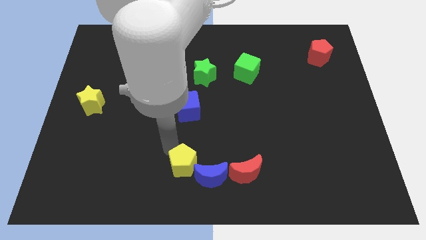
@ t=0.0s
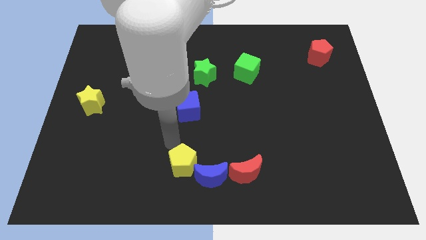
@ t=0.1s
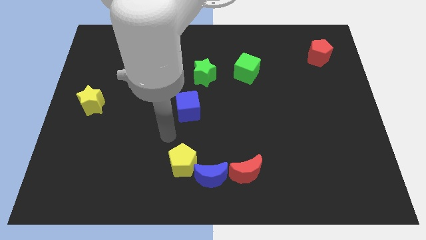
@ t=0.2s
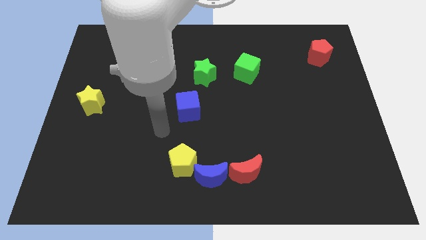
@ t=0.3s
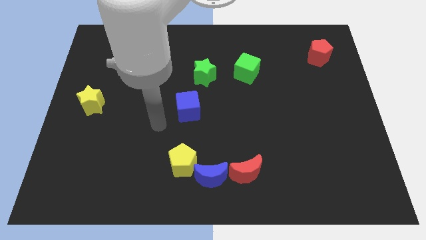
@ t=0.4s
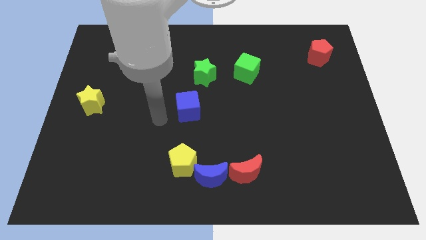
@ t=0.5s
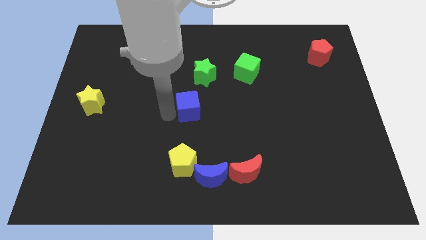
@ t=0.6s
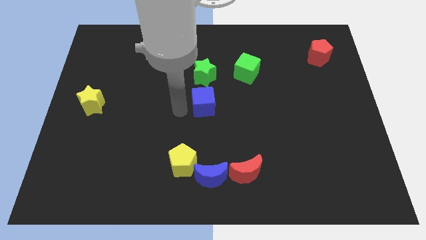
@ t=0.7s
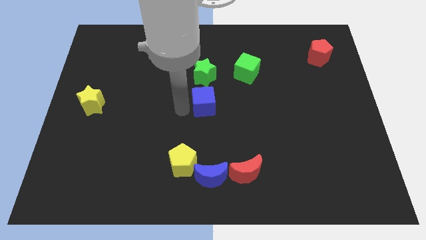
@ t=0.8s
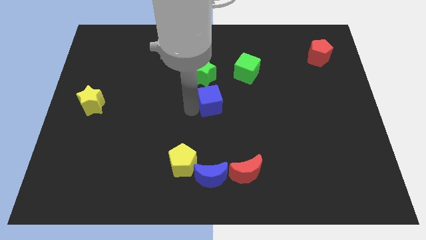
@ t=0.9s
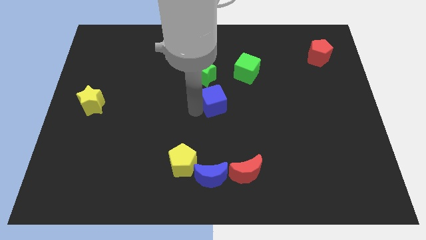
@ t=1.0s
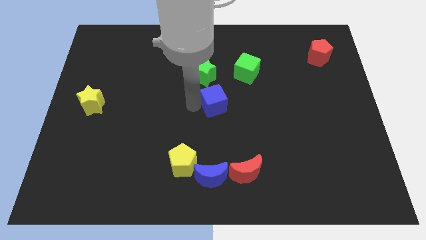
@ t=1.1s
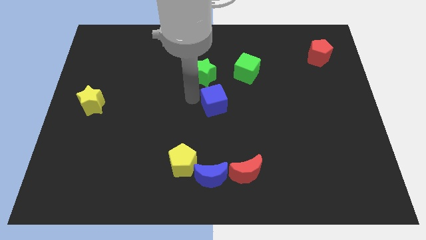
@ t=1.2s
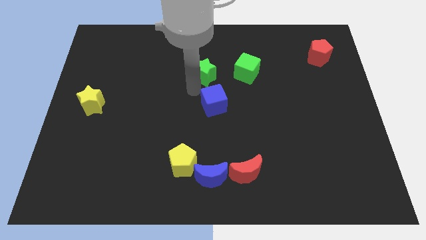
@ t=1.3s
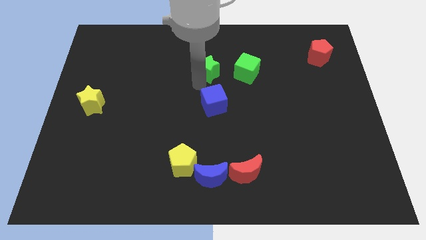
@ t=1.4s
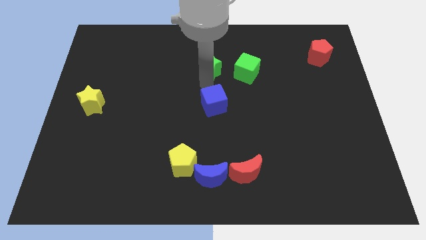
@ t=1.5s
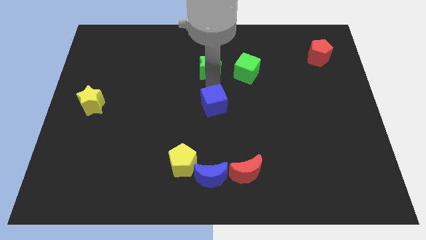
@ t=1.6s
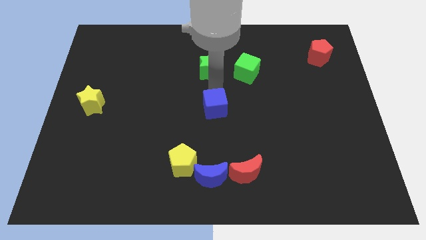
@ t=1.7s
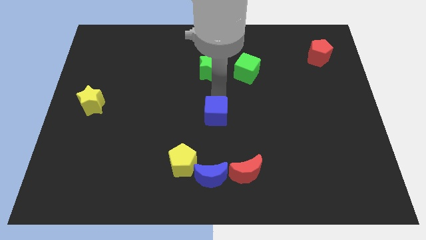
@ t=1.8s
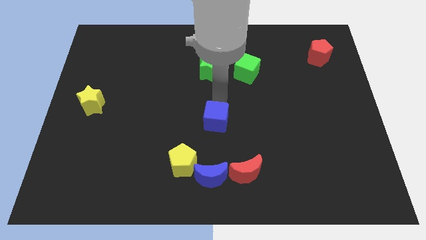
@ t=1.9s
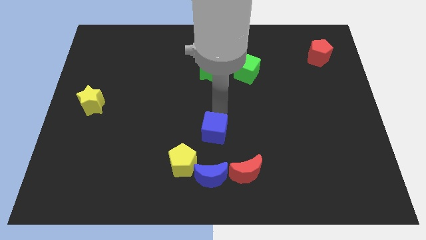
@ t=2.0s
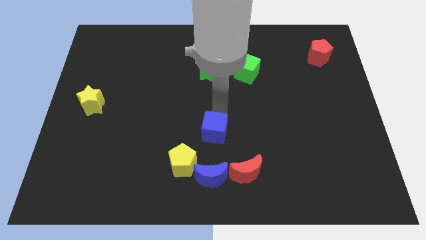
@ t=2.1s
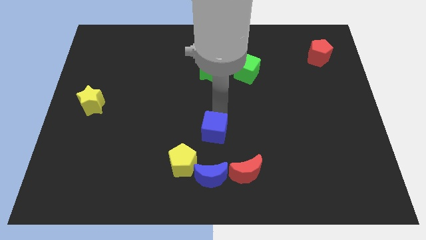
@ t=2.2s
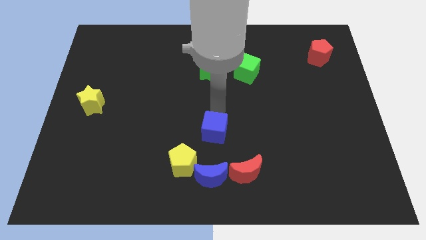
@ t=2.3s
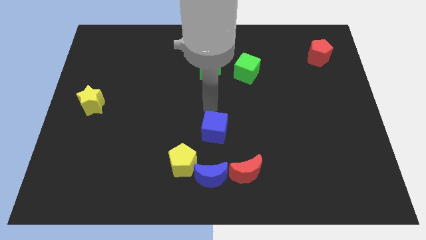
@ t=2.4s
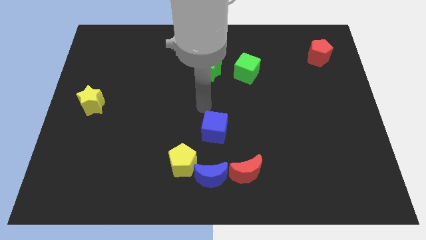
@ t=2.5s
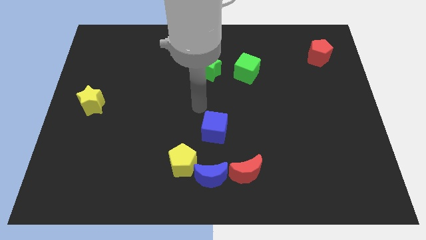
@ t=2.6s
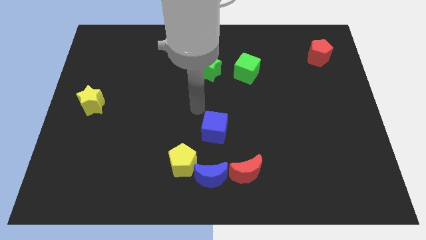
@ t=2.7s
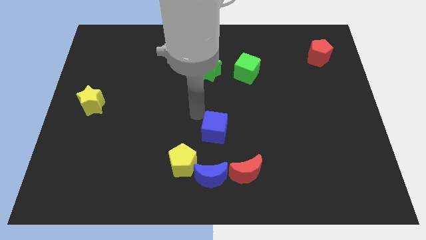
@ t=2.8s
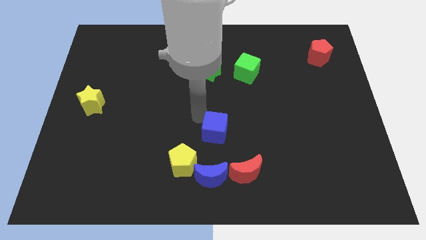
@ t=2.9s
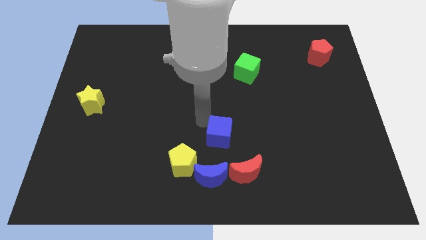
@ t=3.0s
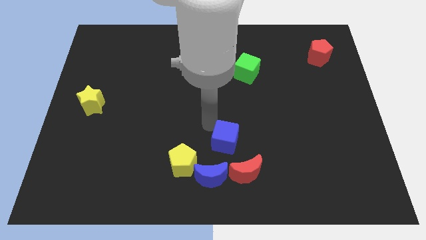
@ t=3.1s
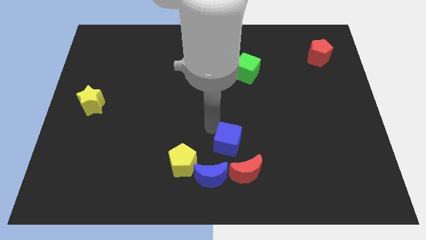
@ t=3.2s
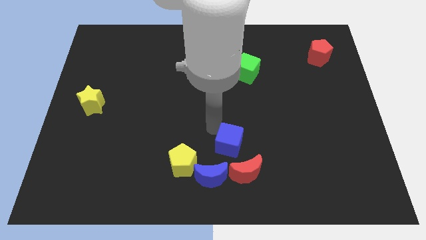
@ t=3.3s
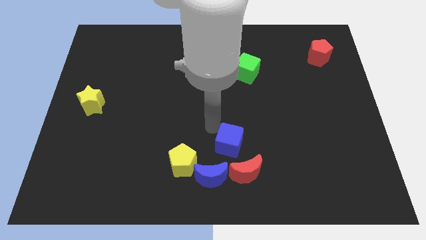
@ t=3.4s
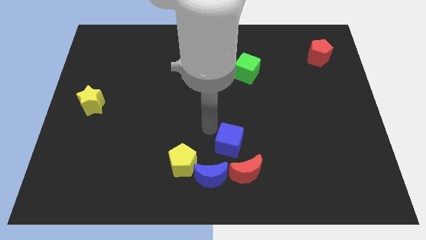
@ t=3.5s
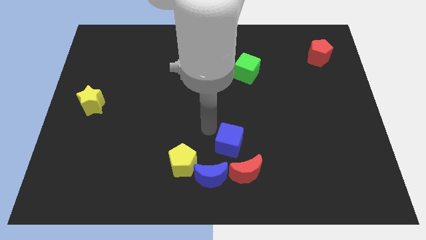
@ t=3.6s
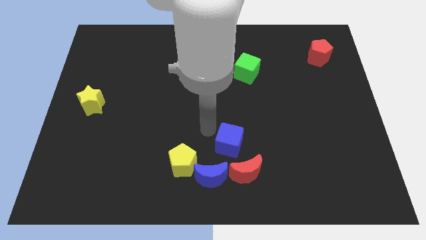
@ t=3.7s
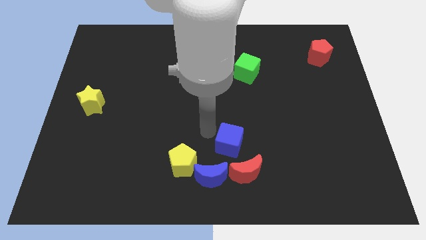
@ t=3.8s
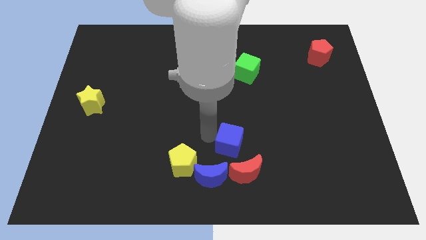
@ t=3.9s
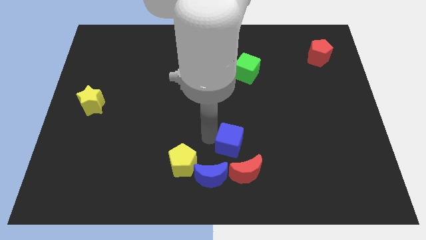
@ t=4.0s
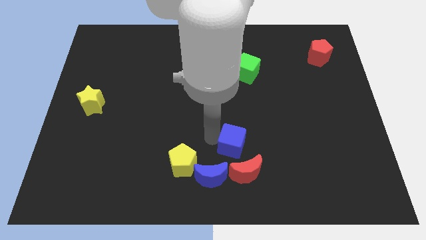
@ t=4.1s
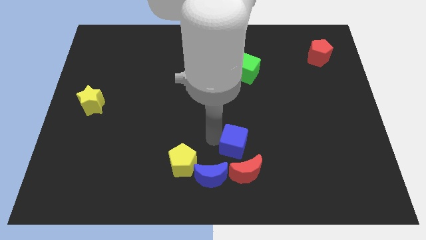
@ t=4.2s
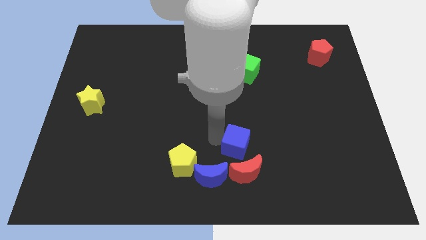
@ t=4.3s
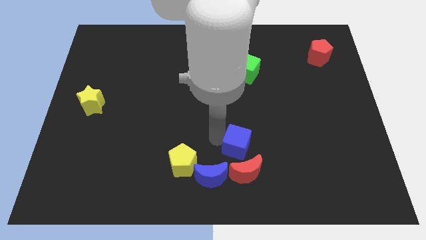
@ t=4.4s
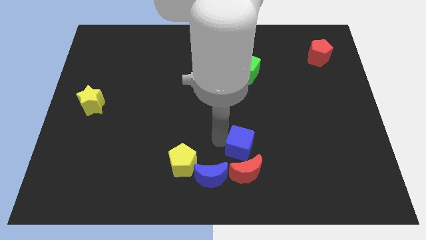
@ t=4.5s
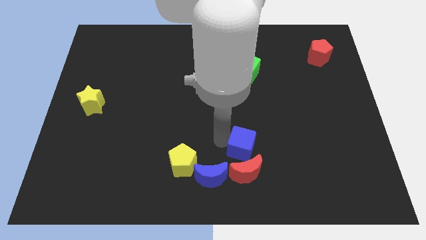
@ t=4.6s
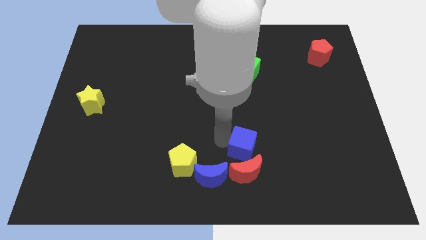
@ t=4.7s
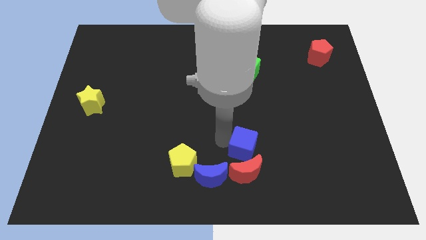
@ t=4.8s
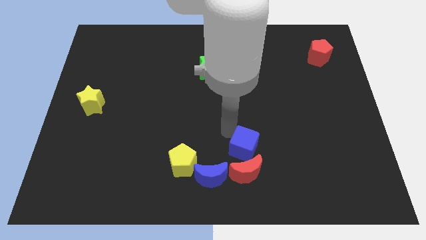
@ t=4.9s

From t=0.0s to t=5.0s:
push the blue cube above the red moon

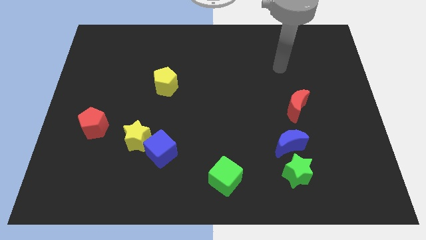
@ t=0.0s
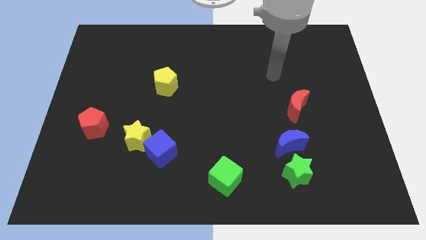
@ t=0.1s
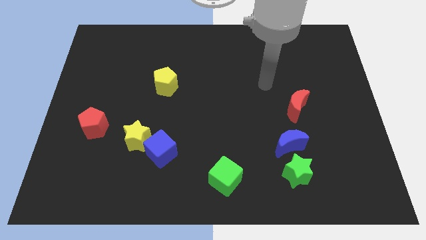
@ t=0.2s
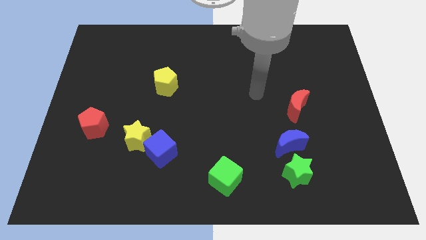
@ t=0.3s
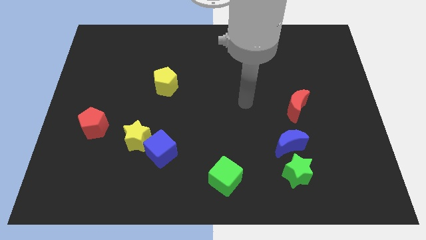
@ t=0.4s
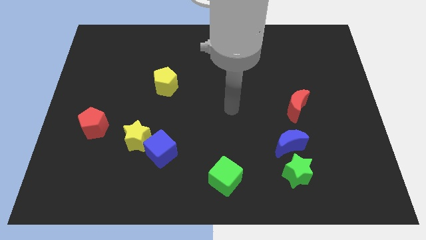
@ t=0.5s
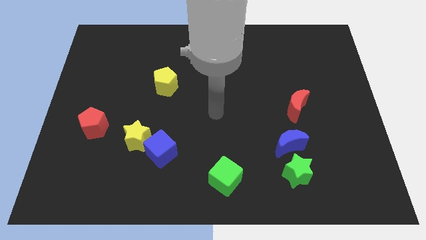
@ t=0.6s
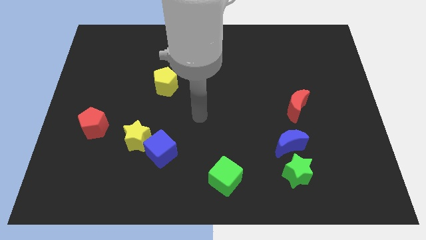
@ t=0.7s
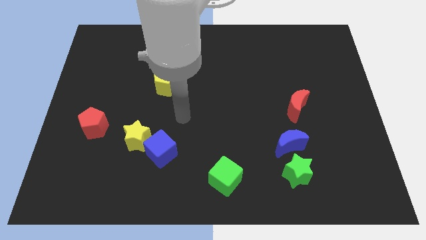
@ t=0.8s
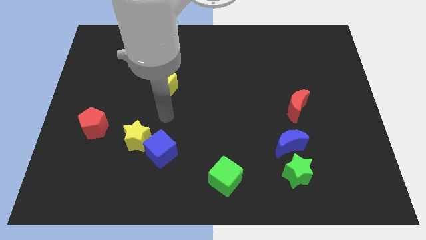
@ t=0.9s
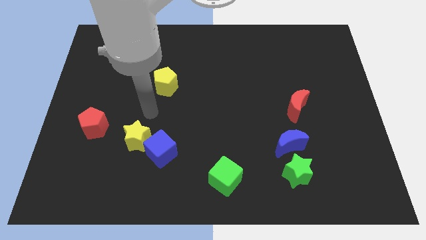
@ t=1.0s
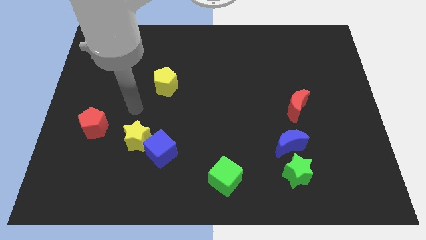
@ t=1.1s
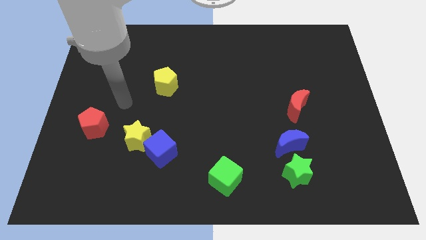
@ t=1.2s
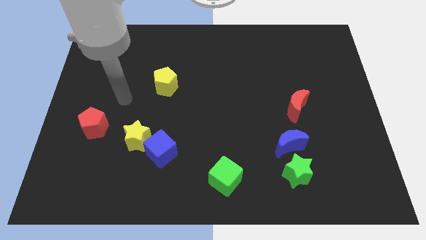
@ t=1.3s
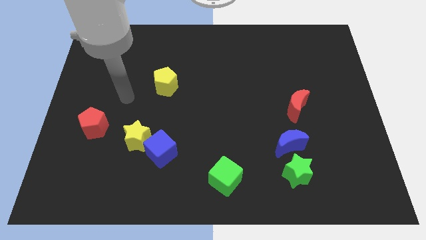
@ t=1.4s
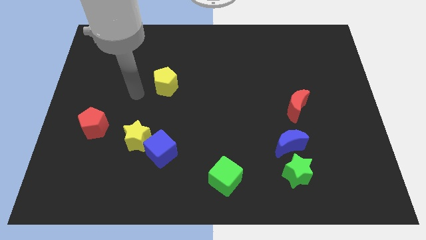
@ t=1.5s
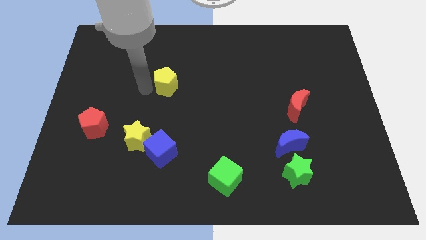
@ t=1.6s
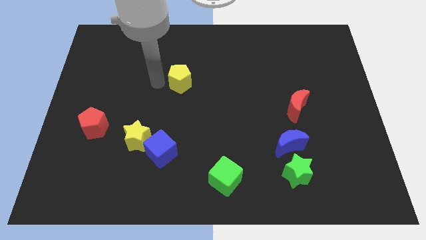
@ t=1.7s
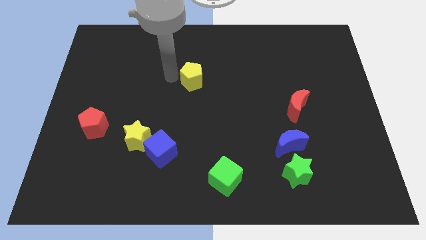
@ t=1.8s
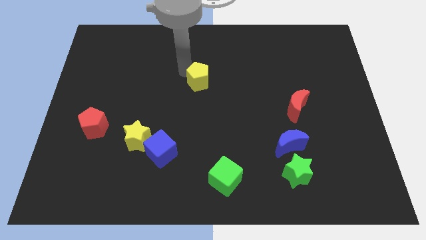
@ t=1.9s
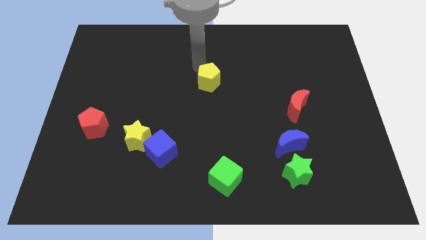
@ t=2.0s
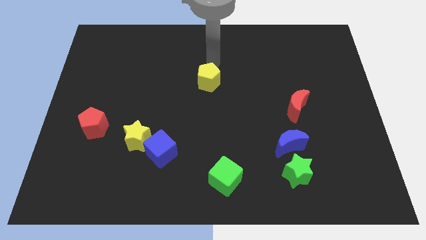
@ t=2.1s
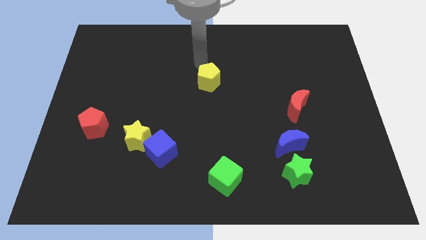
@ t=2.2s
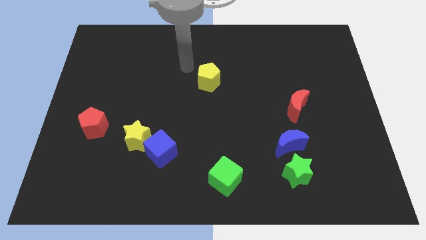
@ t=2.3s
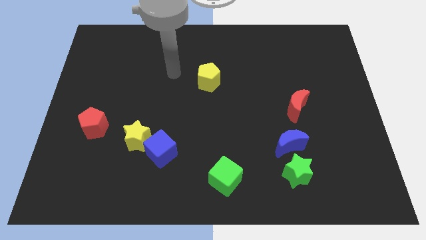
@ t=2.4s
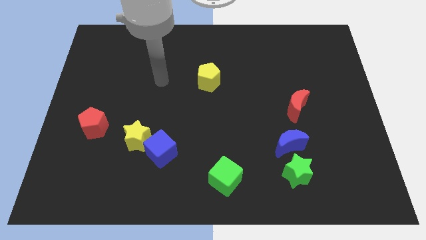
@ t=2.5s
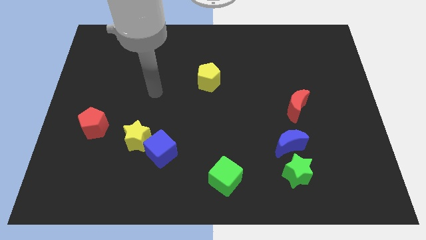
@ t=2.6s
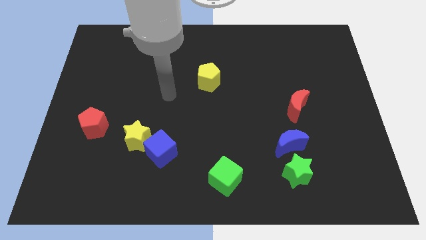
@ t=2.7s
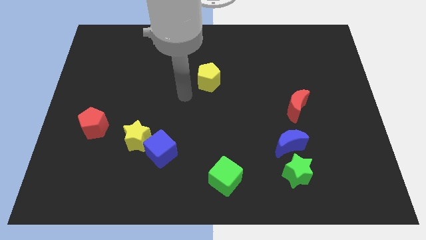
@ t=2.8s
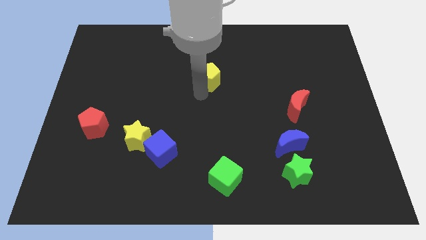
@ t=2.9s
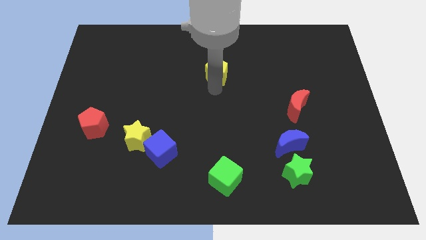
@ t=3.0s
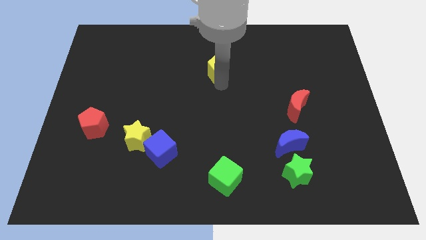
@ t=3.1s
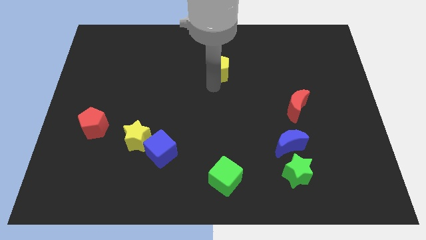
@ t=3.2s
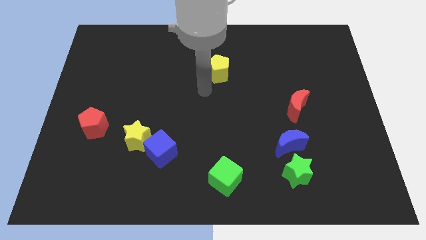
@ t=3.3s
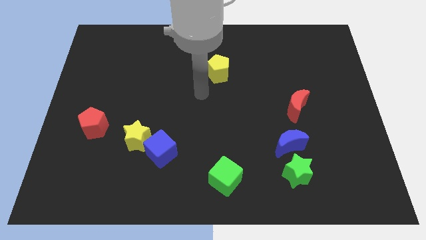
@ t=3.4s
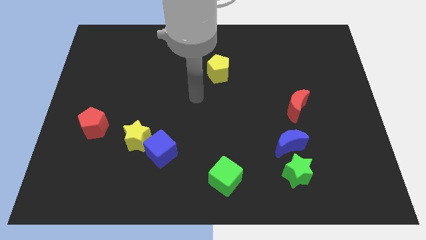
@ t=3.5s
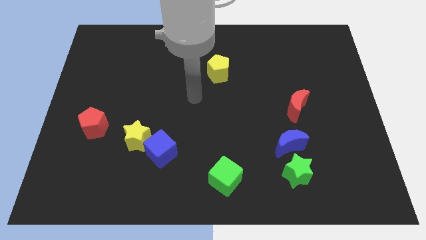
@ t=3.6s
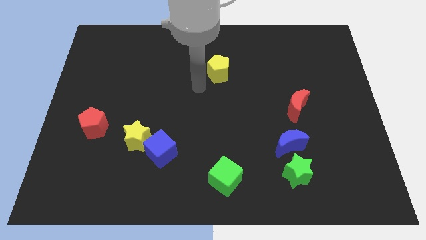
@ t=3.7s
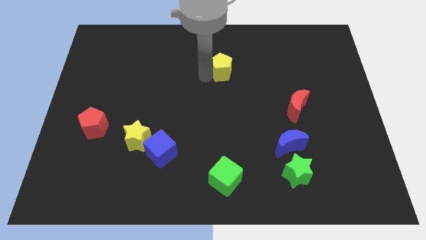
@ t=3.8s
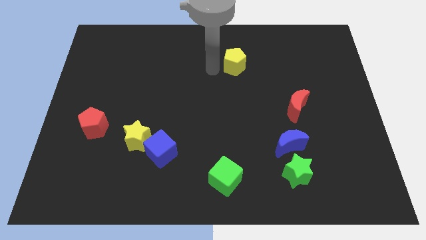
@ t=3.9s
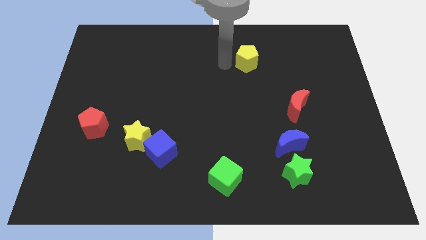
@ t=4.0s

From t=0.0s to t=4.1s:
push the yellow pentagon above green cube
